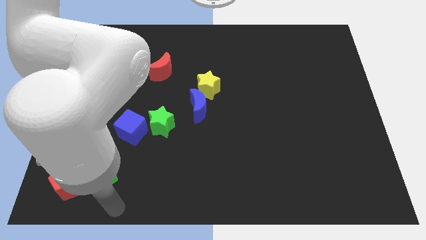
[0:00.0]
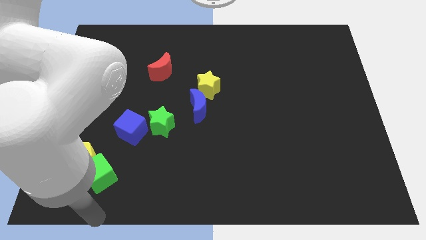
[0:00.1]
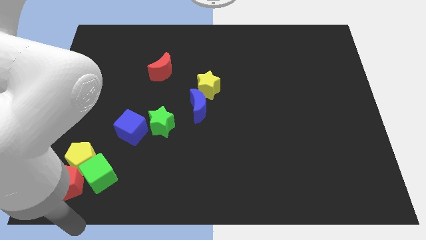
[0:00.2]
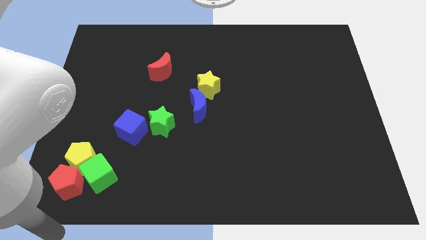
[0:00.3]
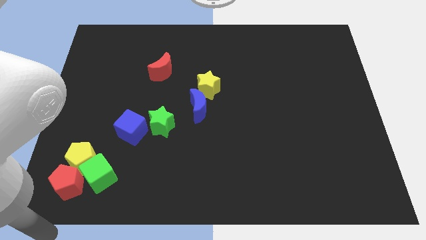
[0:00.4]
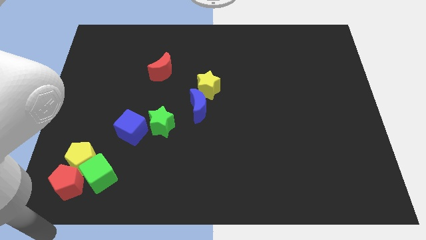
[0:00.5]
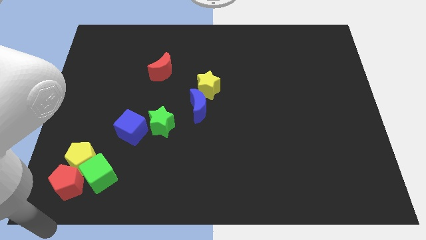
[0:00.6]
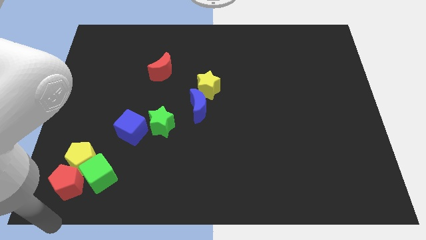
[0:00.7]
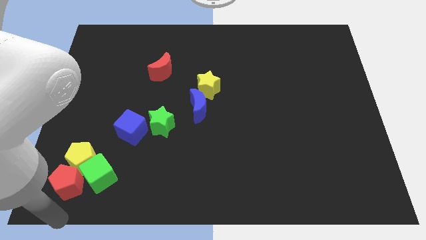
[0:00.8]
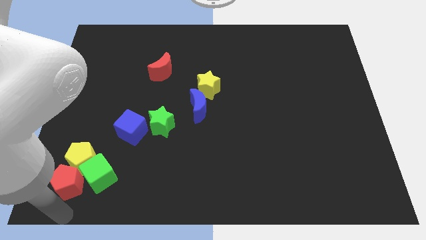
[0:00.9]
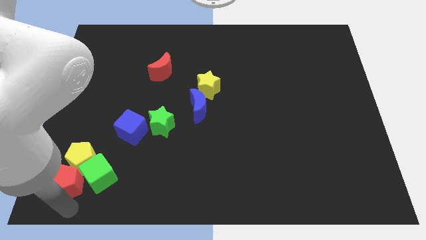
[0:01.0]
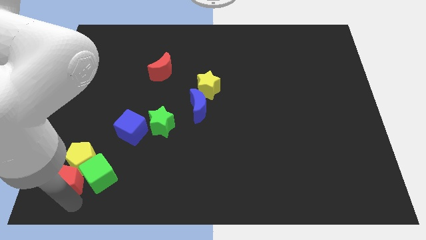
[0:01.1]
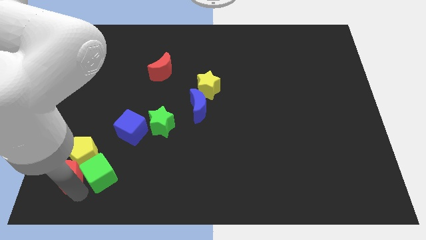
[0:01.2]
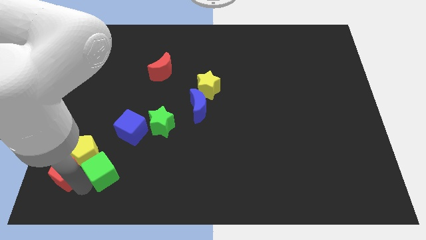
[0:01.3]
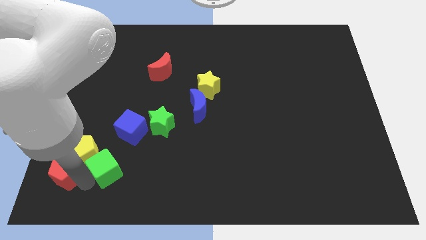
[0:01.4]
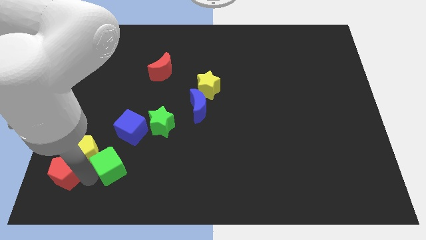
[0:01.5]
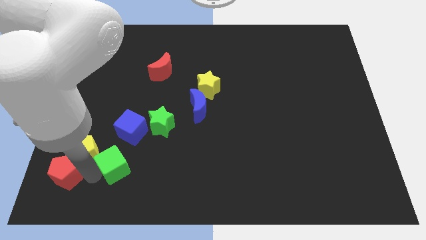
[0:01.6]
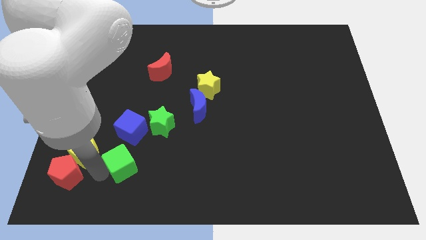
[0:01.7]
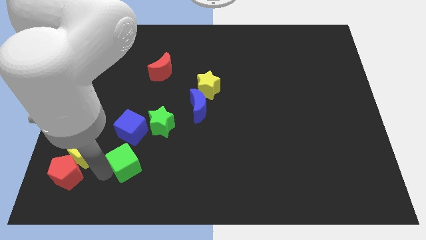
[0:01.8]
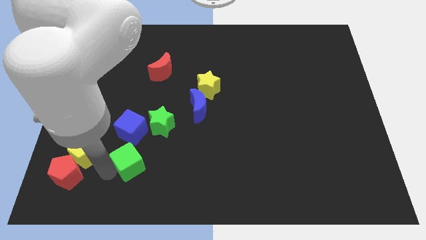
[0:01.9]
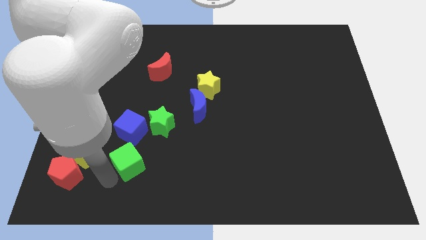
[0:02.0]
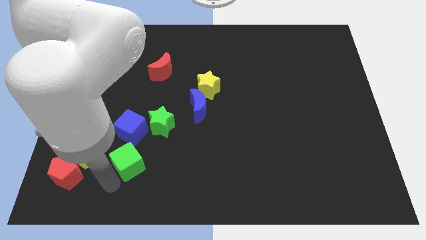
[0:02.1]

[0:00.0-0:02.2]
separate the green cube from yellow pentagon

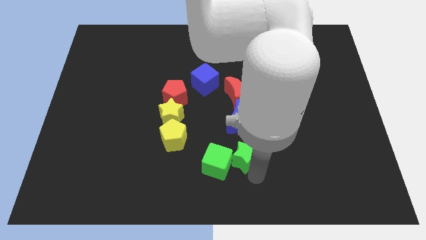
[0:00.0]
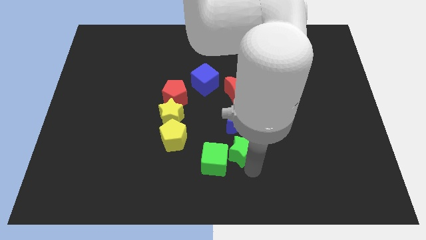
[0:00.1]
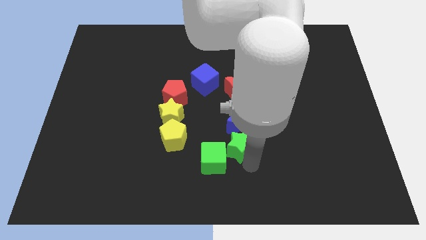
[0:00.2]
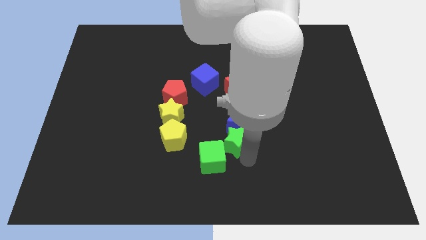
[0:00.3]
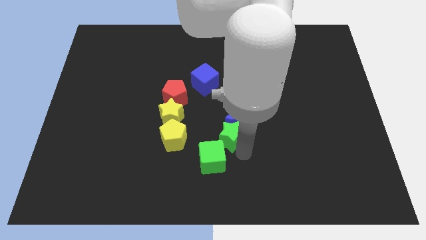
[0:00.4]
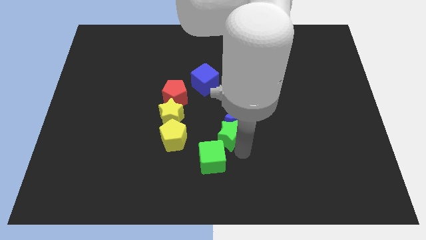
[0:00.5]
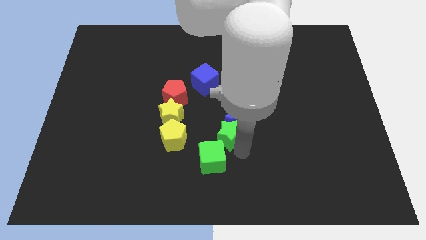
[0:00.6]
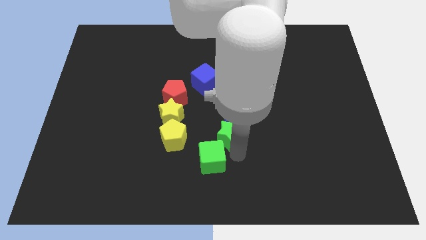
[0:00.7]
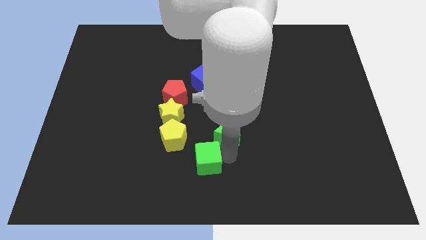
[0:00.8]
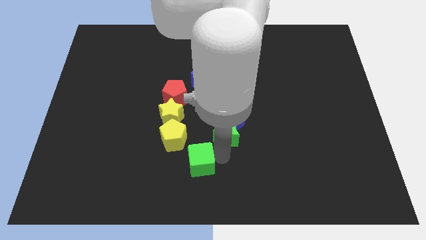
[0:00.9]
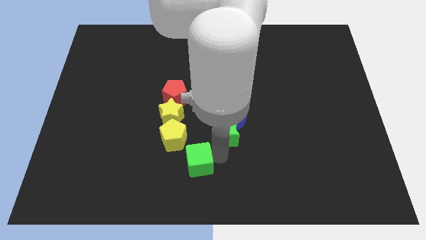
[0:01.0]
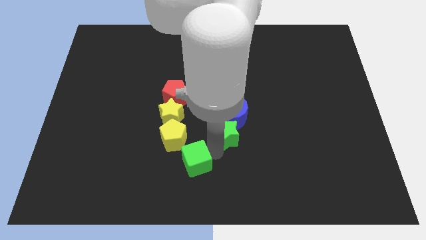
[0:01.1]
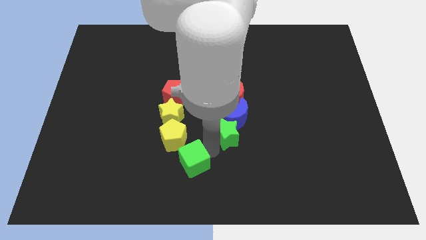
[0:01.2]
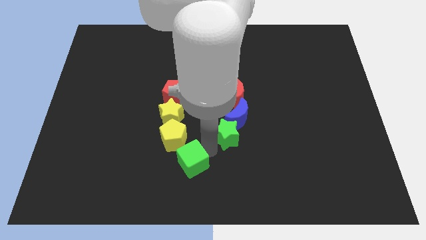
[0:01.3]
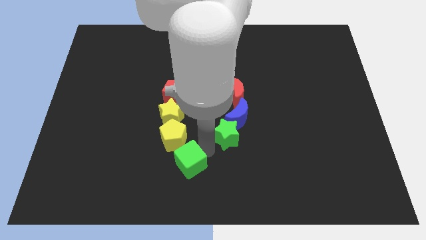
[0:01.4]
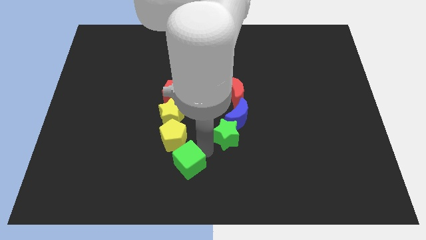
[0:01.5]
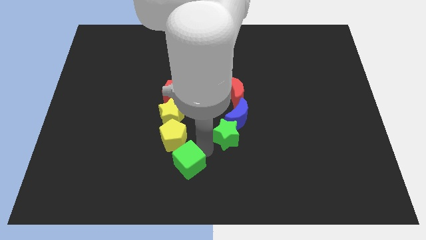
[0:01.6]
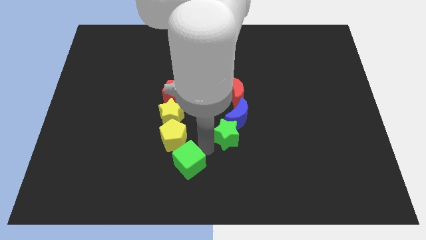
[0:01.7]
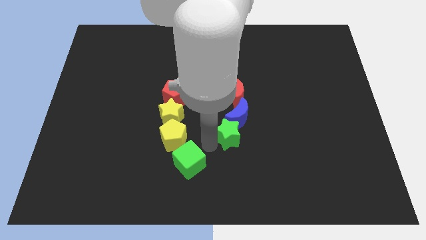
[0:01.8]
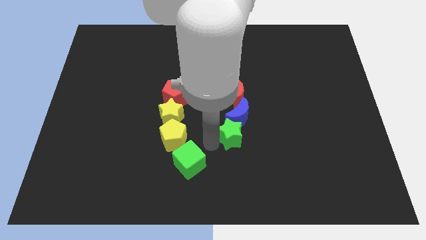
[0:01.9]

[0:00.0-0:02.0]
place green star below blue moon

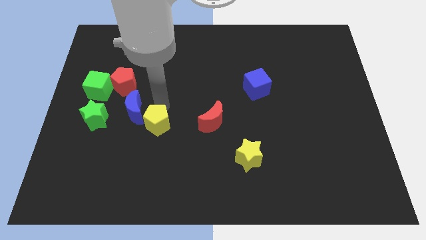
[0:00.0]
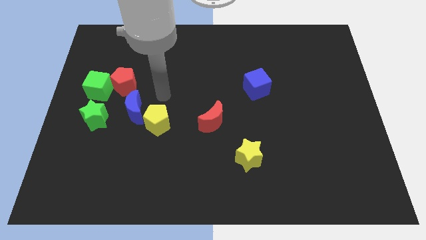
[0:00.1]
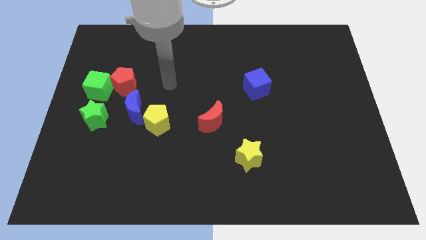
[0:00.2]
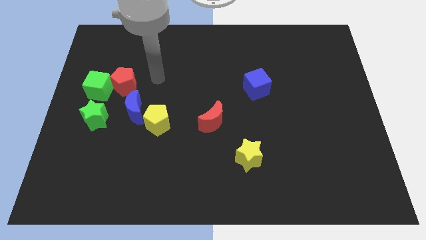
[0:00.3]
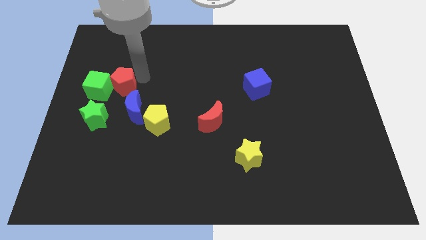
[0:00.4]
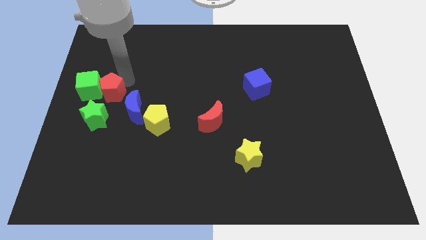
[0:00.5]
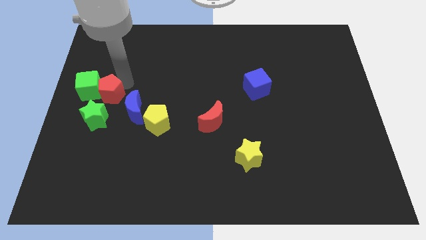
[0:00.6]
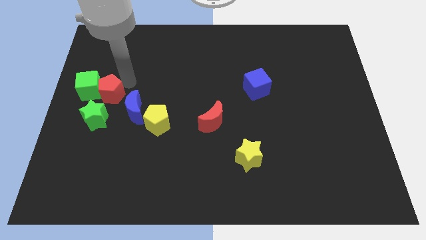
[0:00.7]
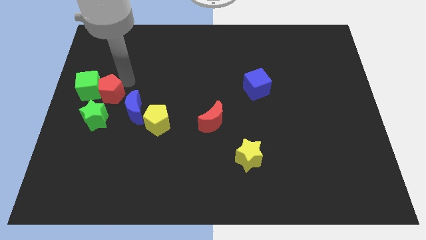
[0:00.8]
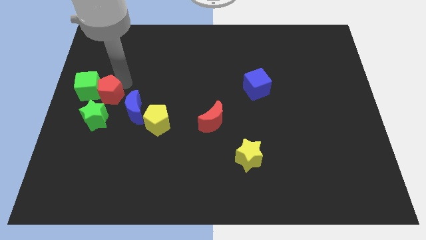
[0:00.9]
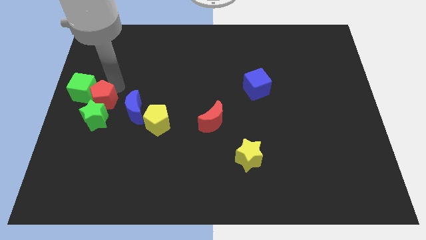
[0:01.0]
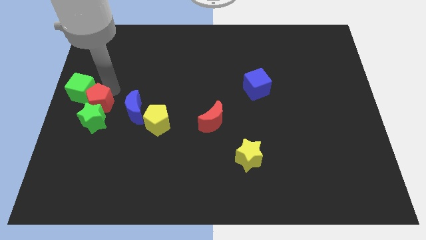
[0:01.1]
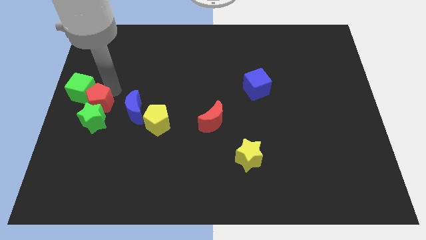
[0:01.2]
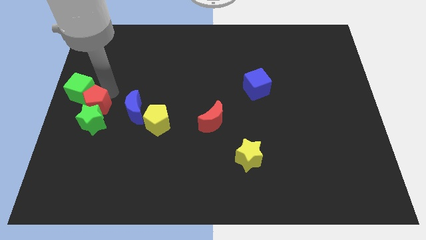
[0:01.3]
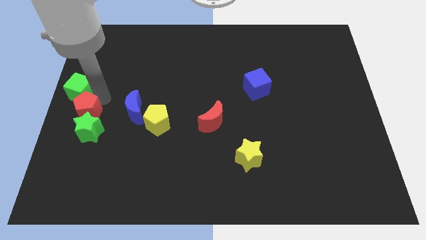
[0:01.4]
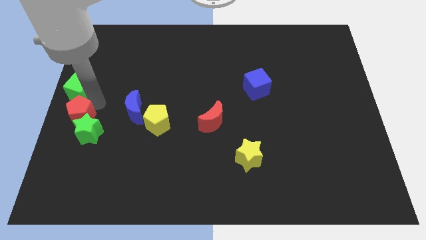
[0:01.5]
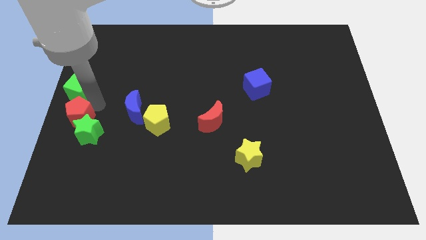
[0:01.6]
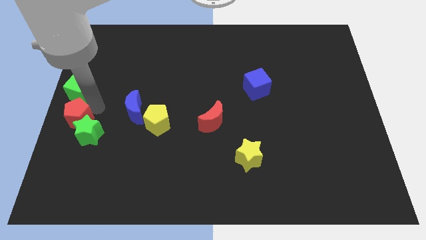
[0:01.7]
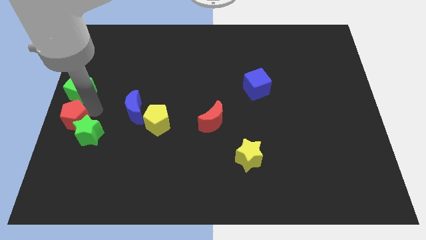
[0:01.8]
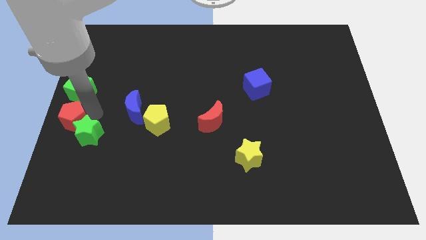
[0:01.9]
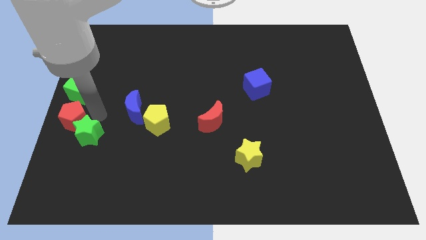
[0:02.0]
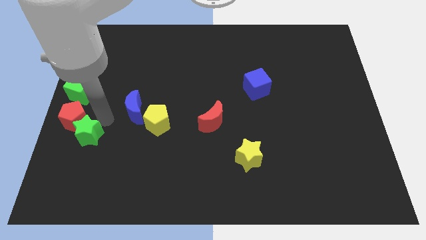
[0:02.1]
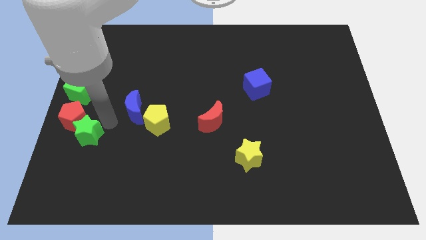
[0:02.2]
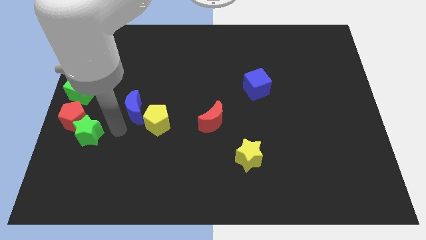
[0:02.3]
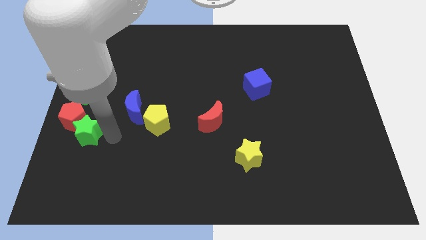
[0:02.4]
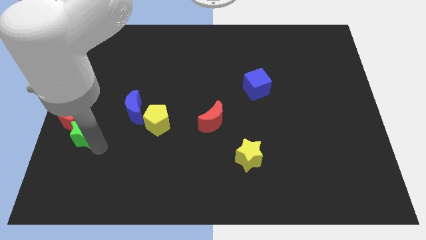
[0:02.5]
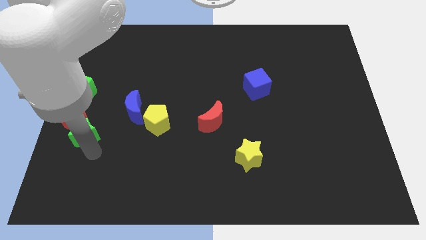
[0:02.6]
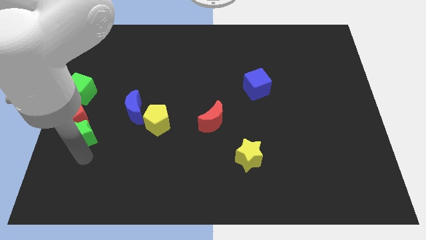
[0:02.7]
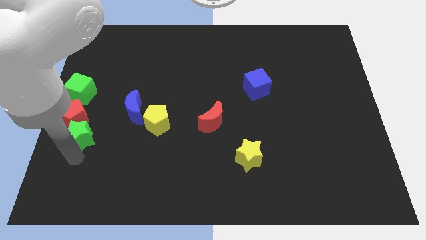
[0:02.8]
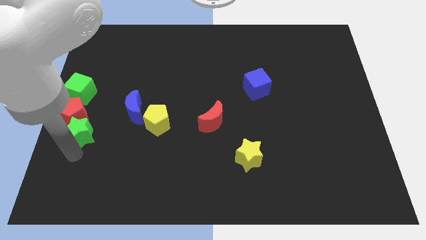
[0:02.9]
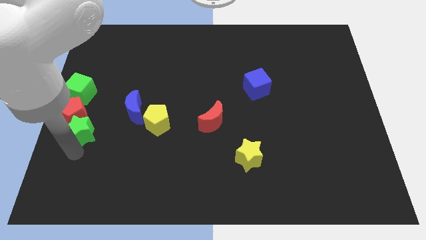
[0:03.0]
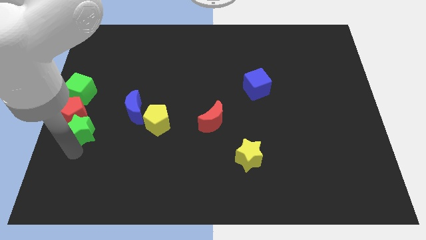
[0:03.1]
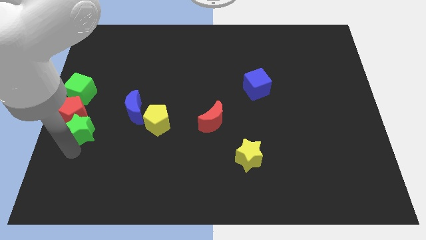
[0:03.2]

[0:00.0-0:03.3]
place the red pentagon in between the green star and green cube

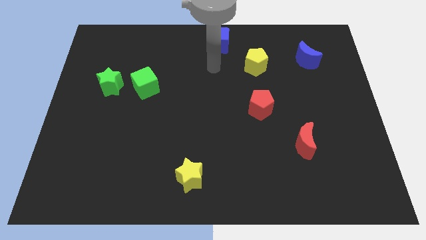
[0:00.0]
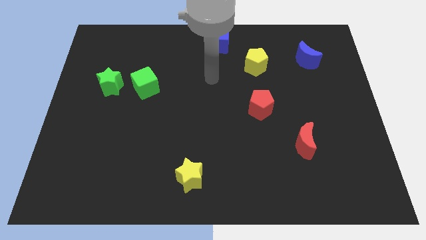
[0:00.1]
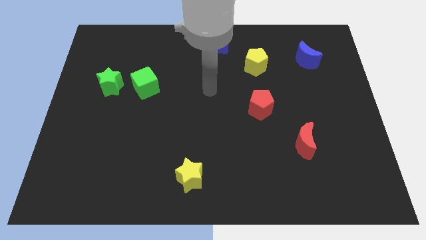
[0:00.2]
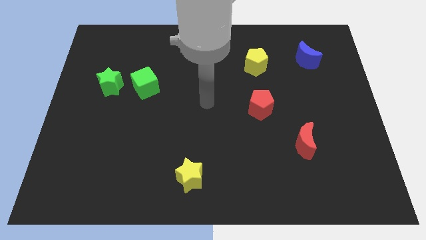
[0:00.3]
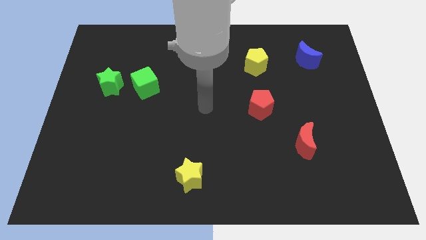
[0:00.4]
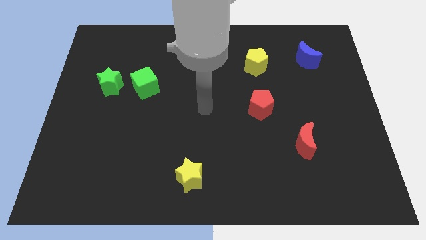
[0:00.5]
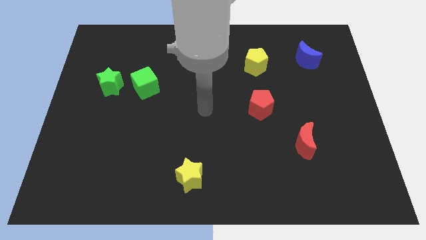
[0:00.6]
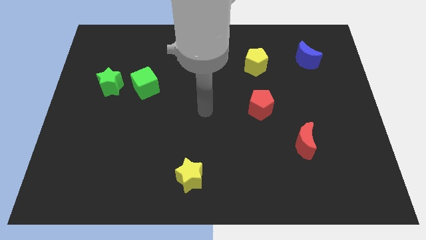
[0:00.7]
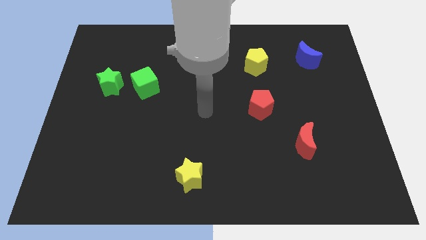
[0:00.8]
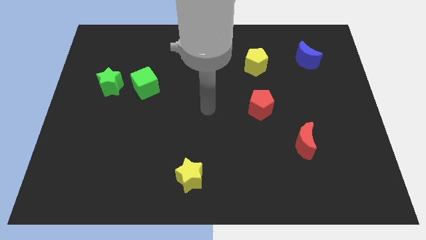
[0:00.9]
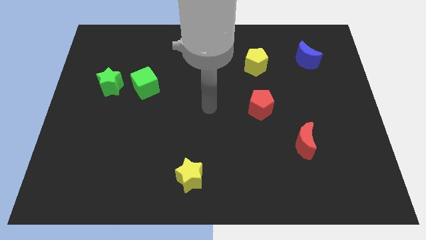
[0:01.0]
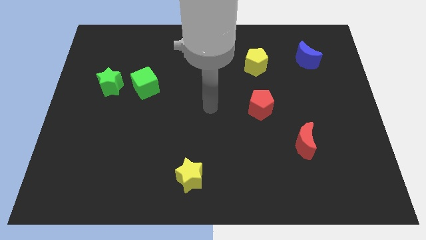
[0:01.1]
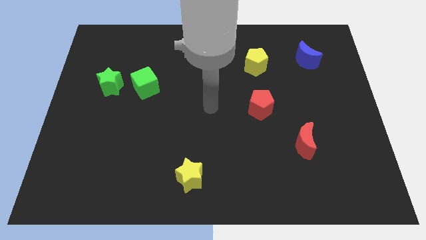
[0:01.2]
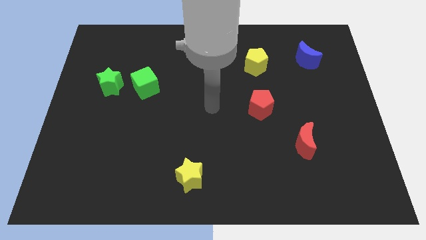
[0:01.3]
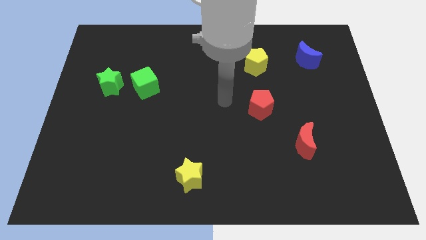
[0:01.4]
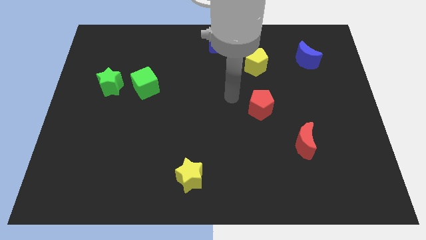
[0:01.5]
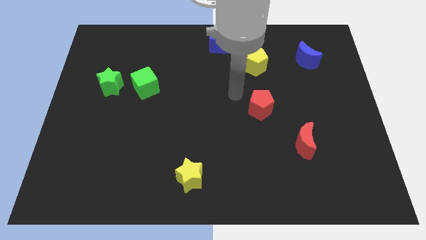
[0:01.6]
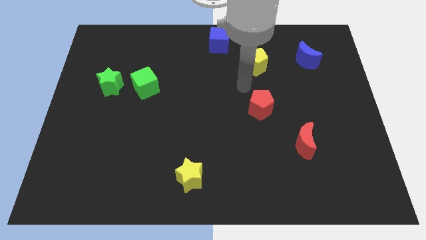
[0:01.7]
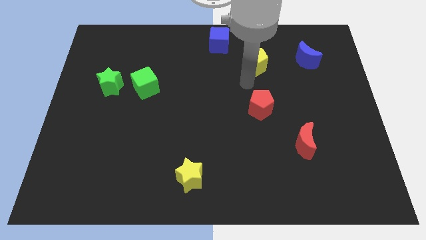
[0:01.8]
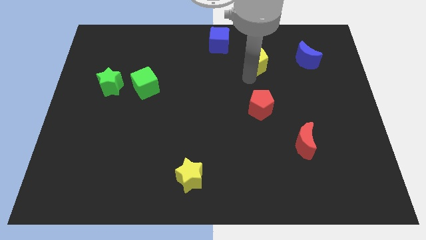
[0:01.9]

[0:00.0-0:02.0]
place your arm to the bottom of the yellow pentagon
